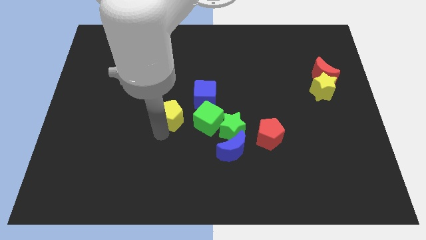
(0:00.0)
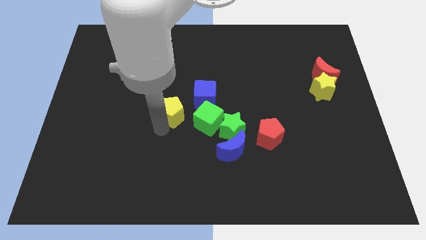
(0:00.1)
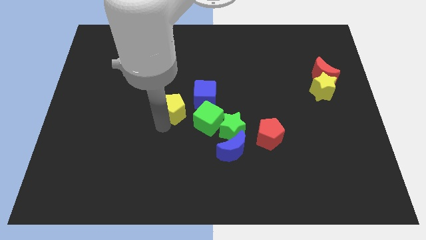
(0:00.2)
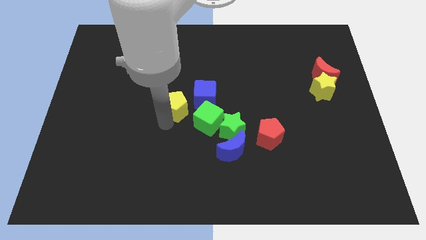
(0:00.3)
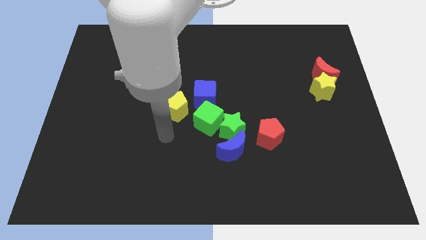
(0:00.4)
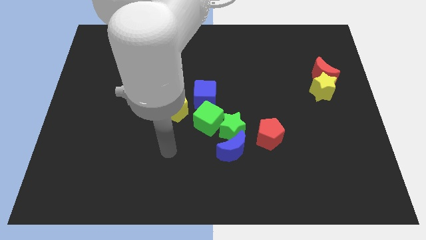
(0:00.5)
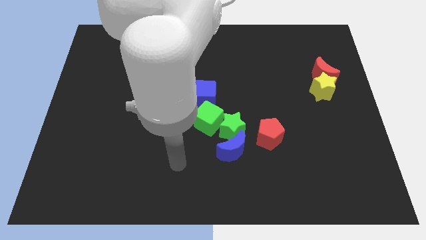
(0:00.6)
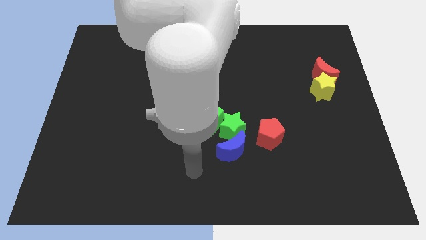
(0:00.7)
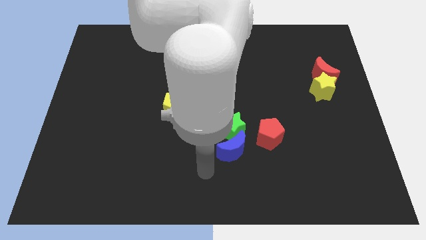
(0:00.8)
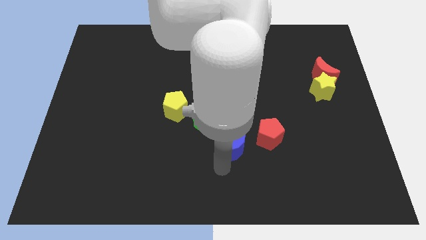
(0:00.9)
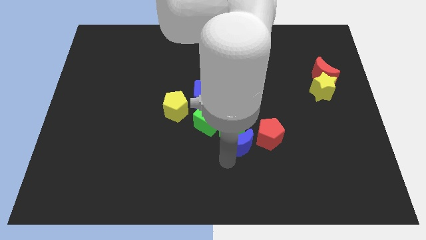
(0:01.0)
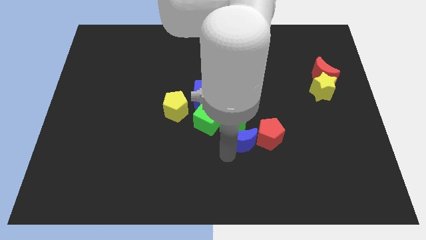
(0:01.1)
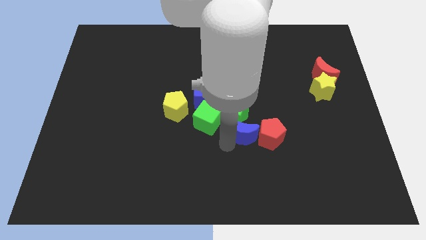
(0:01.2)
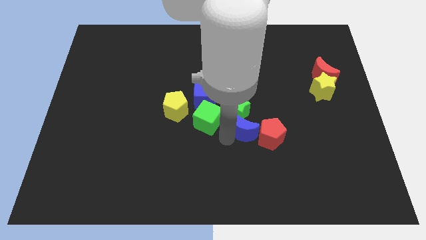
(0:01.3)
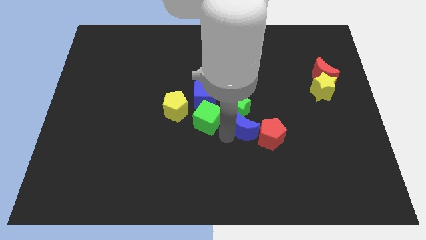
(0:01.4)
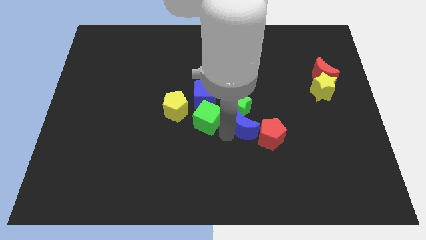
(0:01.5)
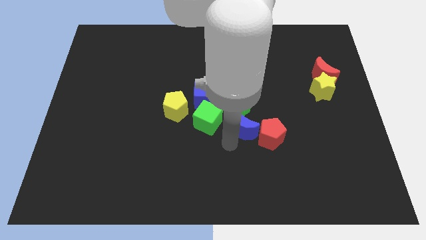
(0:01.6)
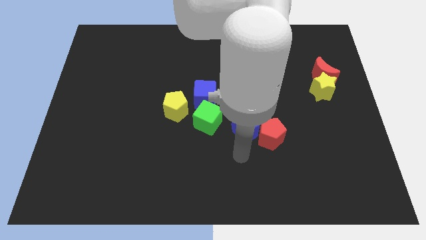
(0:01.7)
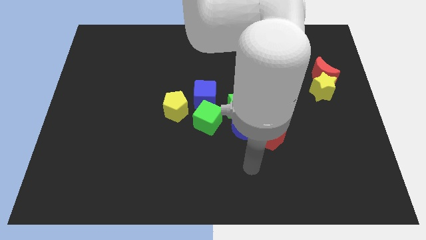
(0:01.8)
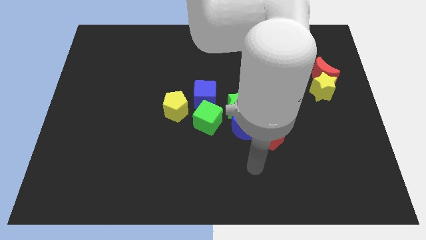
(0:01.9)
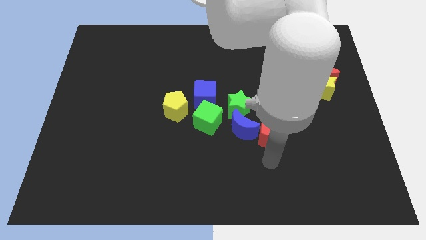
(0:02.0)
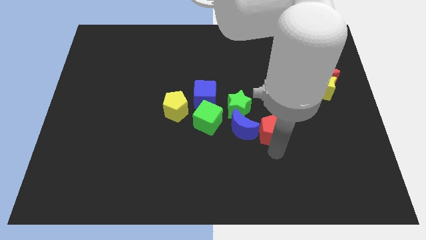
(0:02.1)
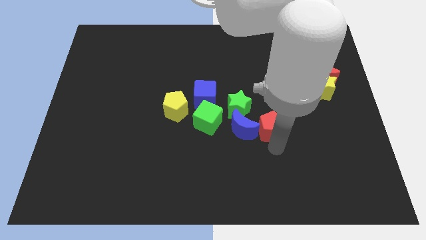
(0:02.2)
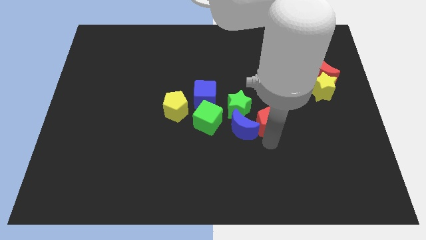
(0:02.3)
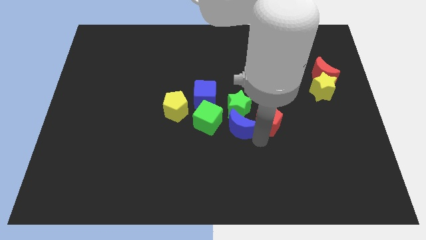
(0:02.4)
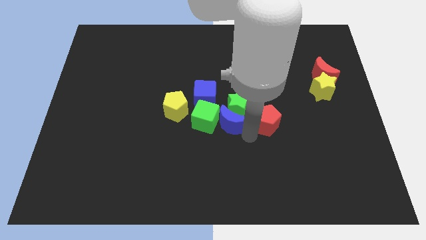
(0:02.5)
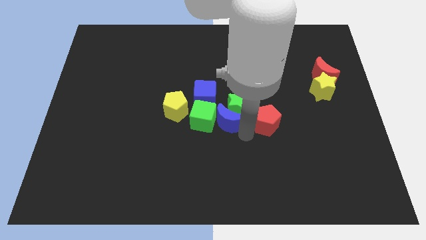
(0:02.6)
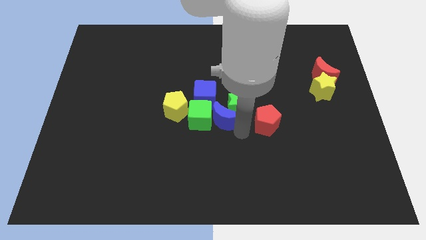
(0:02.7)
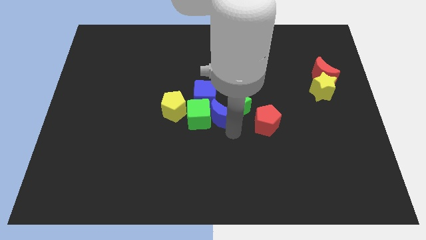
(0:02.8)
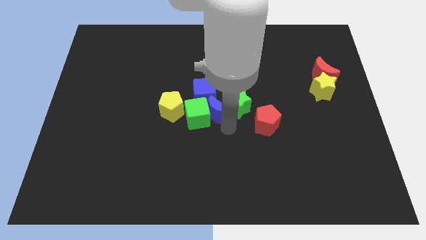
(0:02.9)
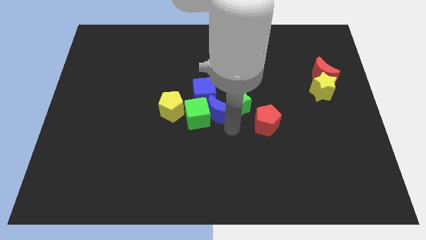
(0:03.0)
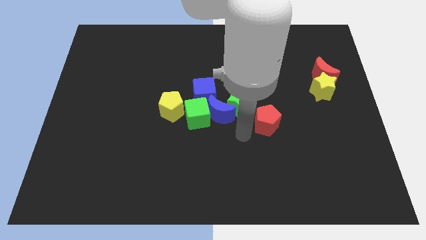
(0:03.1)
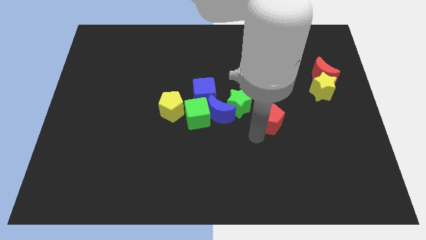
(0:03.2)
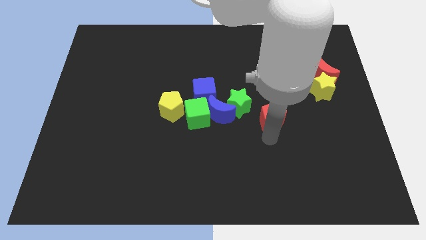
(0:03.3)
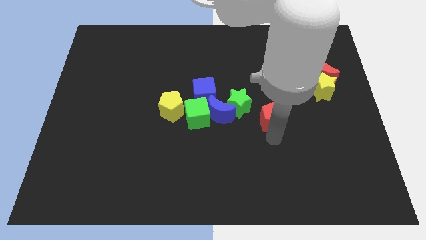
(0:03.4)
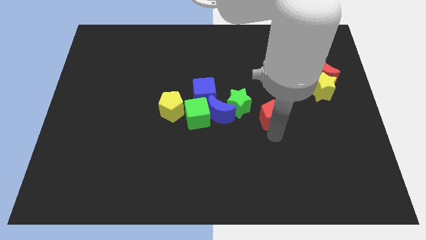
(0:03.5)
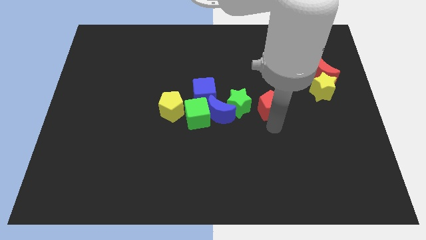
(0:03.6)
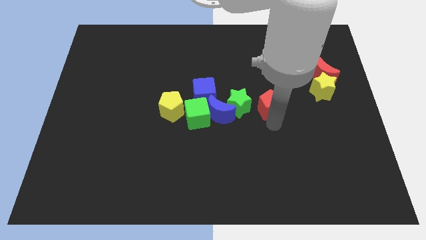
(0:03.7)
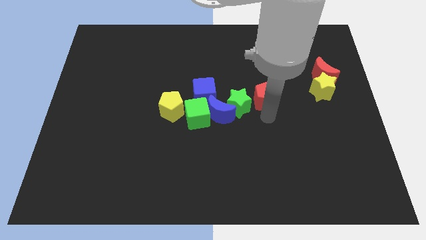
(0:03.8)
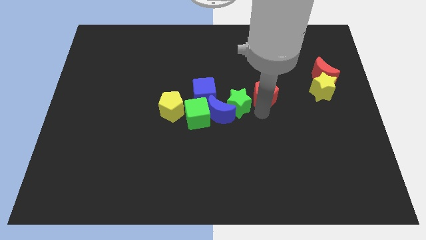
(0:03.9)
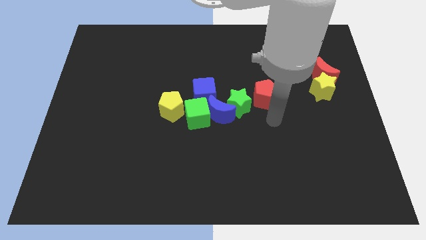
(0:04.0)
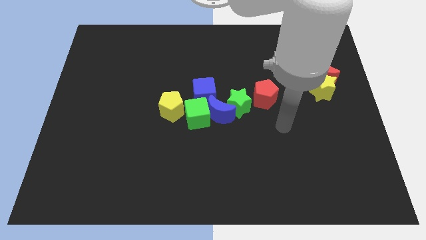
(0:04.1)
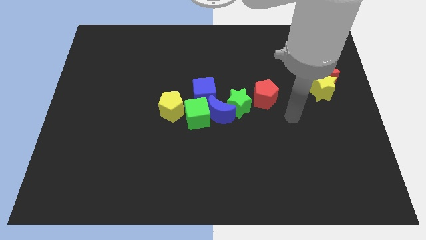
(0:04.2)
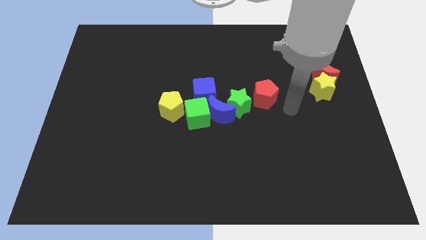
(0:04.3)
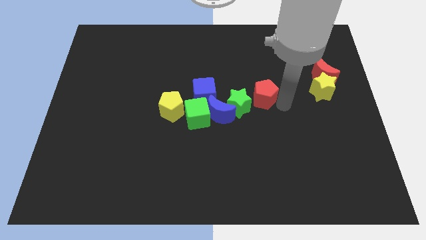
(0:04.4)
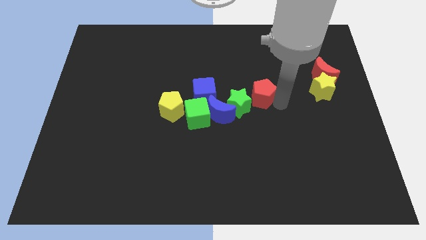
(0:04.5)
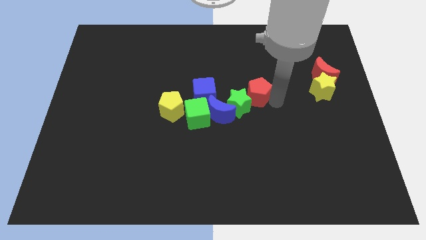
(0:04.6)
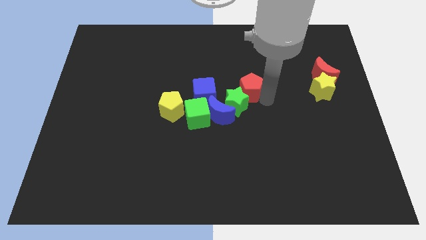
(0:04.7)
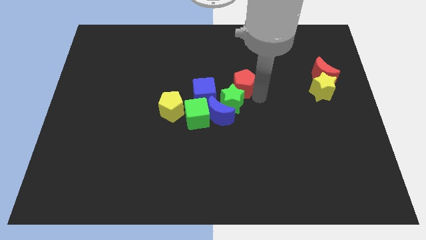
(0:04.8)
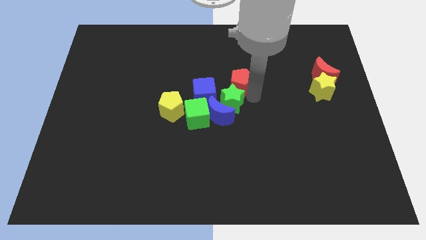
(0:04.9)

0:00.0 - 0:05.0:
make a group of blocks except yellow star and red moon

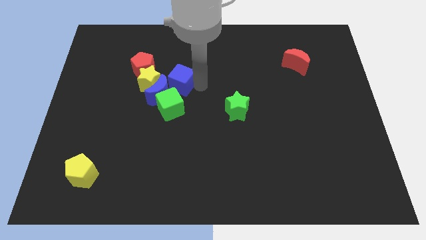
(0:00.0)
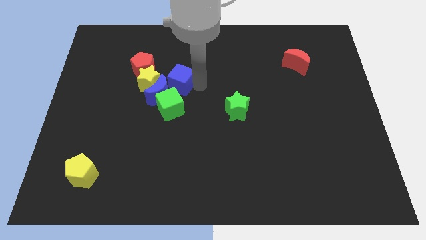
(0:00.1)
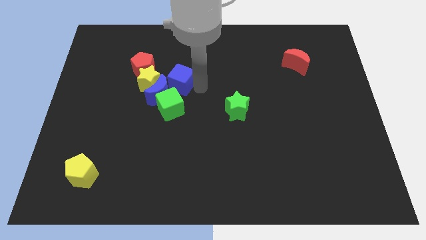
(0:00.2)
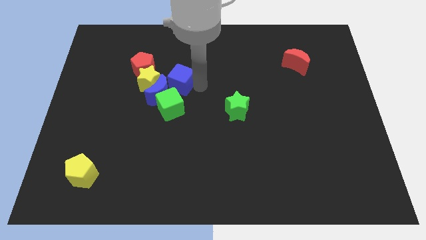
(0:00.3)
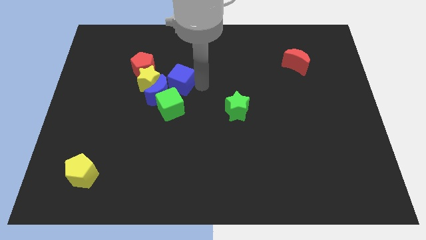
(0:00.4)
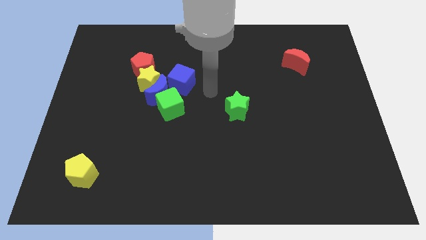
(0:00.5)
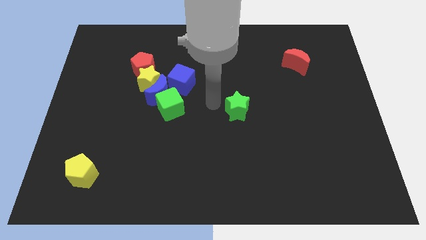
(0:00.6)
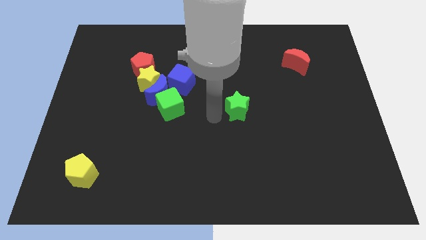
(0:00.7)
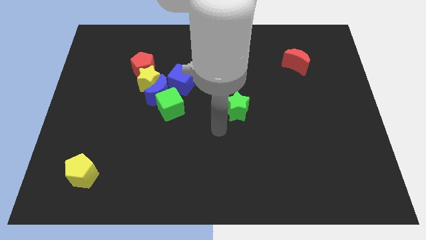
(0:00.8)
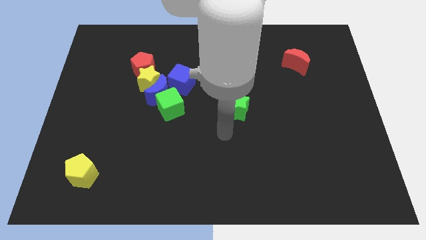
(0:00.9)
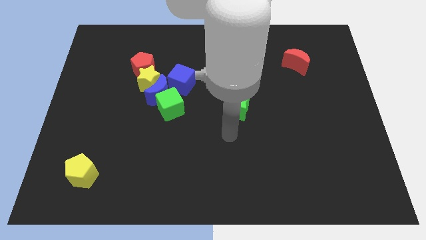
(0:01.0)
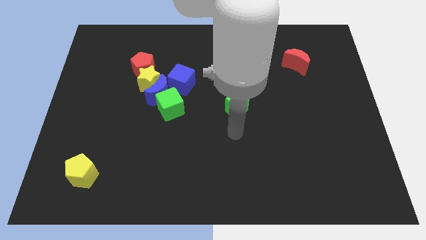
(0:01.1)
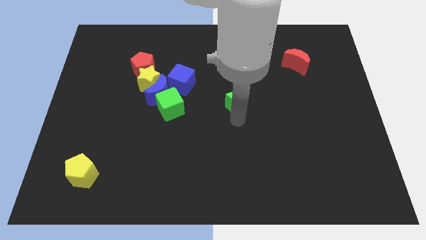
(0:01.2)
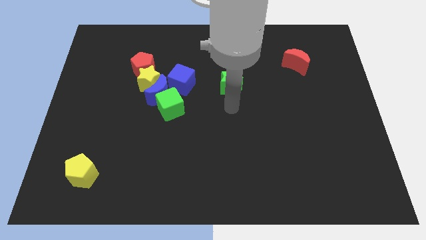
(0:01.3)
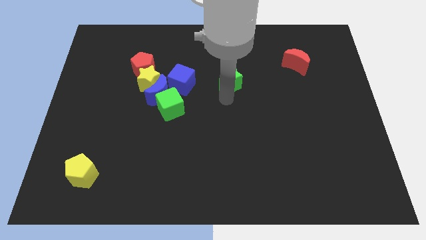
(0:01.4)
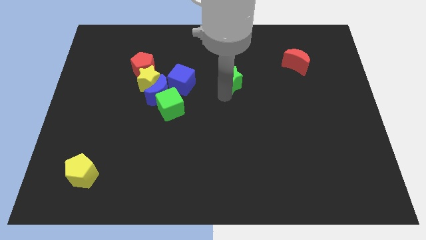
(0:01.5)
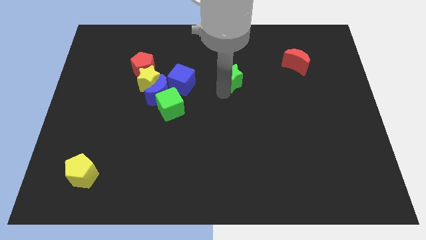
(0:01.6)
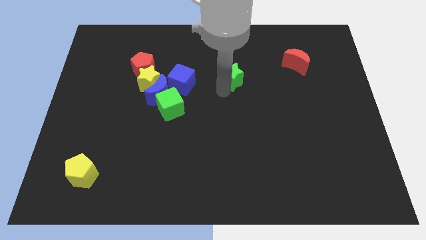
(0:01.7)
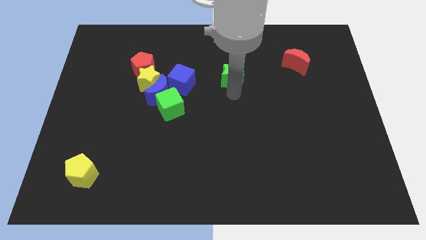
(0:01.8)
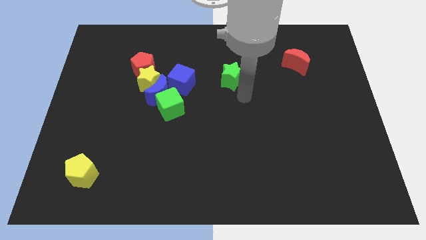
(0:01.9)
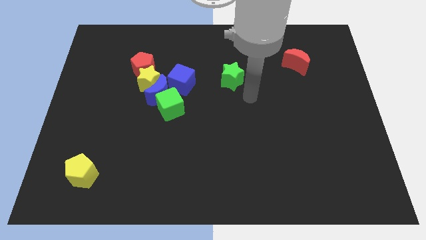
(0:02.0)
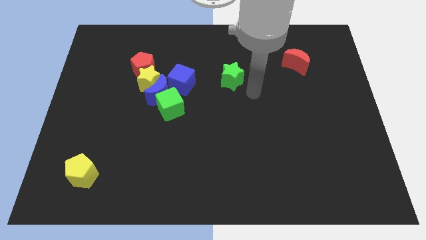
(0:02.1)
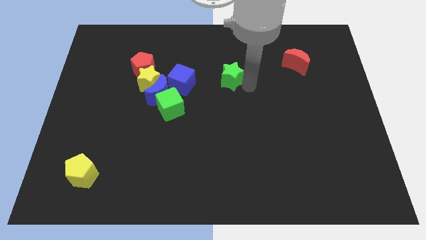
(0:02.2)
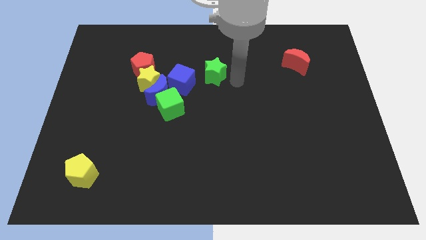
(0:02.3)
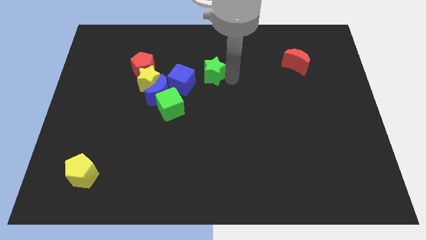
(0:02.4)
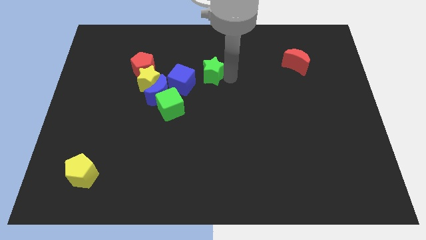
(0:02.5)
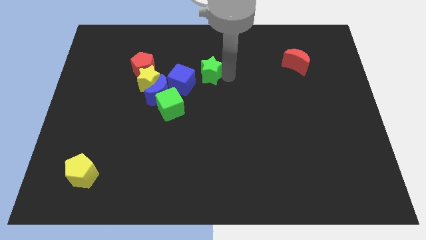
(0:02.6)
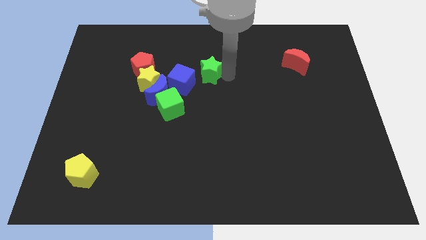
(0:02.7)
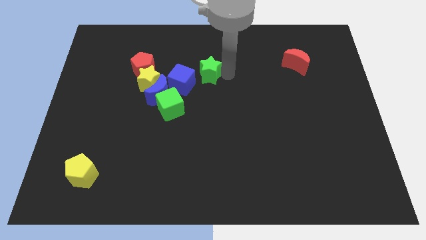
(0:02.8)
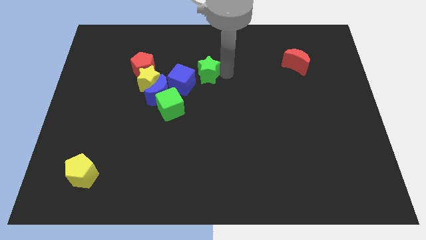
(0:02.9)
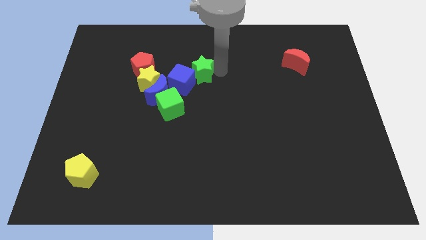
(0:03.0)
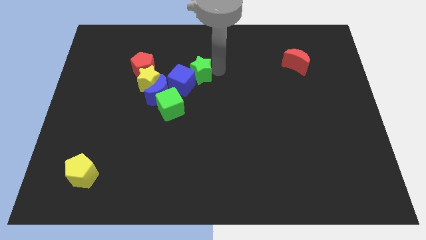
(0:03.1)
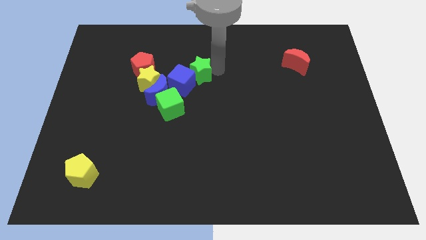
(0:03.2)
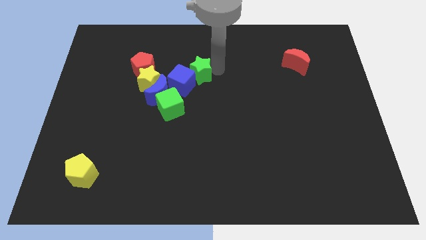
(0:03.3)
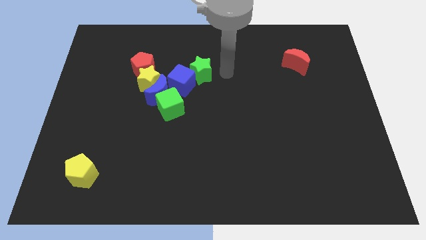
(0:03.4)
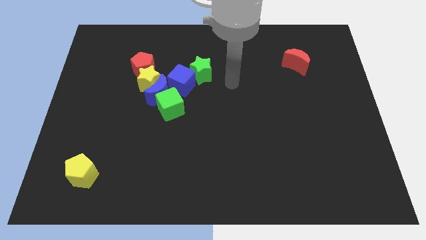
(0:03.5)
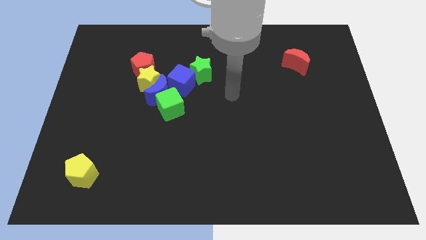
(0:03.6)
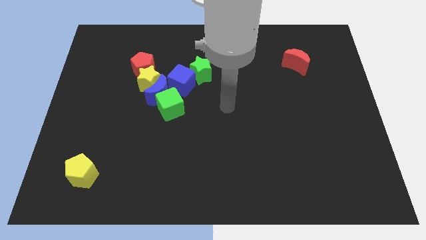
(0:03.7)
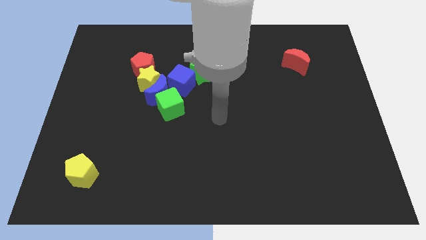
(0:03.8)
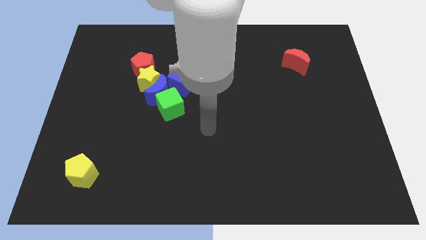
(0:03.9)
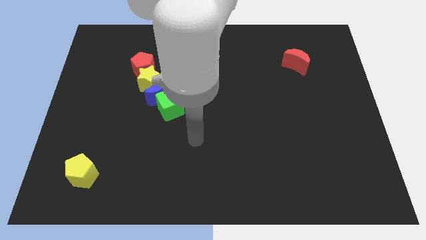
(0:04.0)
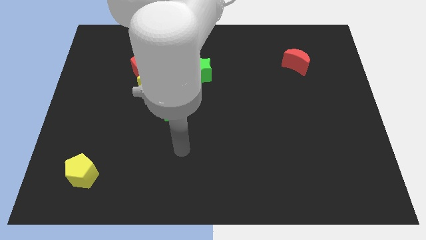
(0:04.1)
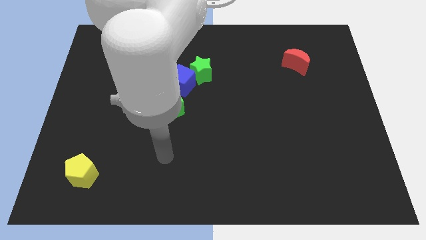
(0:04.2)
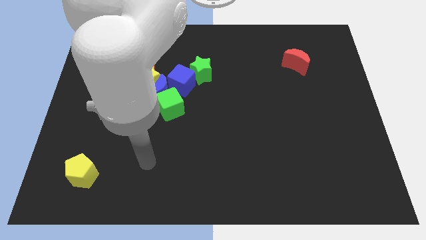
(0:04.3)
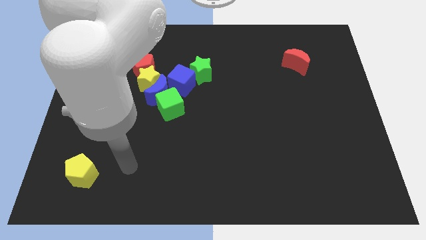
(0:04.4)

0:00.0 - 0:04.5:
push the green star into the blue cube
